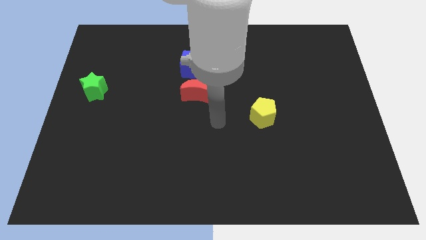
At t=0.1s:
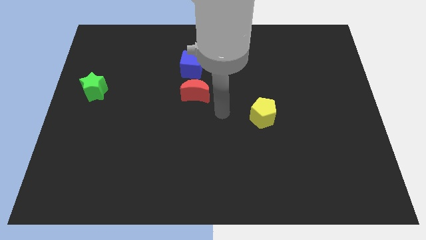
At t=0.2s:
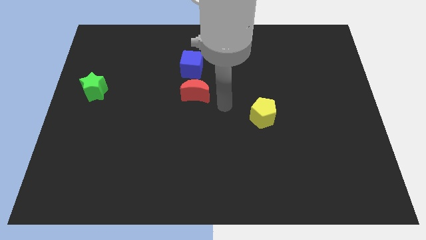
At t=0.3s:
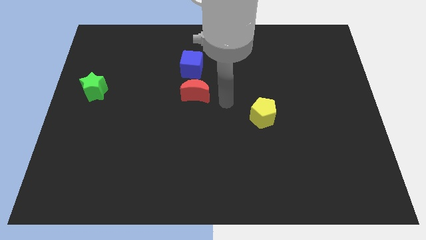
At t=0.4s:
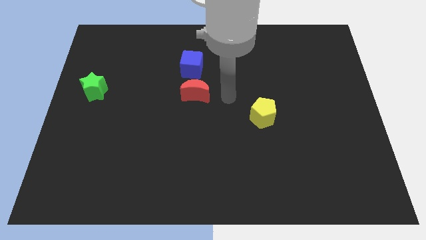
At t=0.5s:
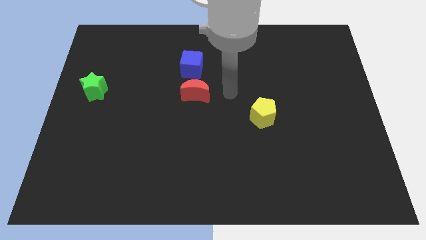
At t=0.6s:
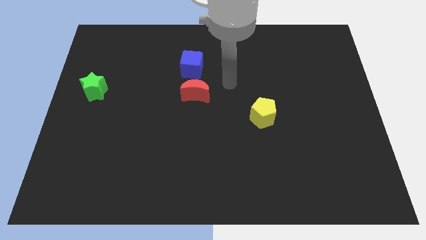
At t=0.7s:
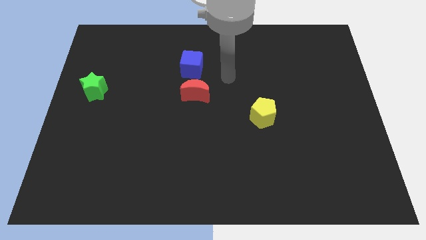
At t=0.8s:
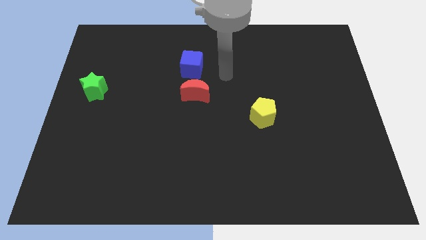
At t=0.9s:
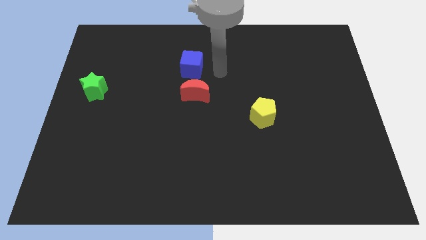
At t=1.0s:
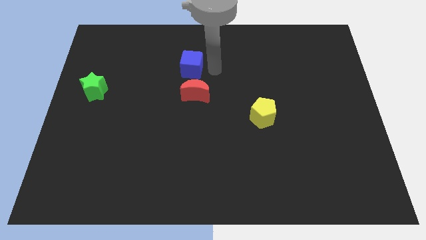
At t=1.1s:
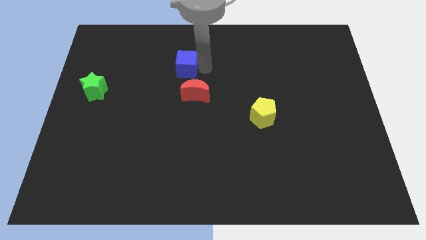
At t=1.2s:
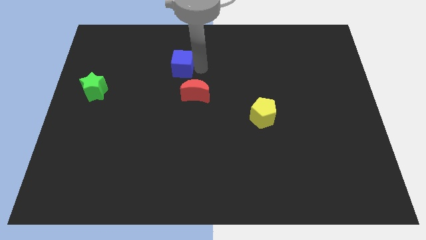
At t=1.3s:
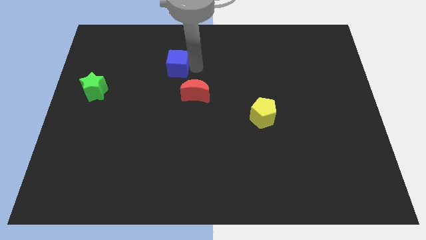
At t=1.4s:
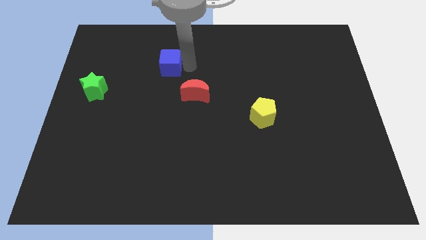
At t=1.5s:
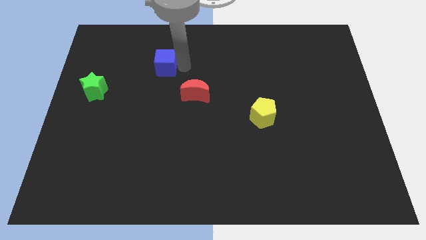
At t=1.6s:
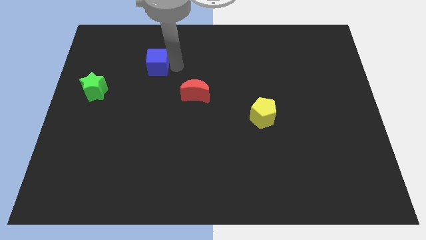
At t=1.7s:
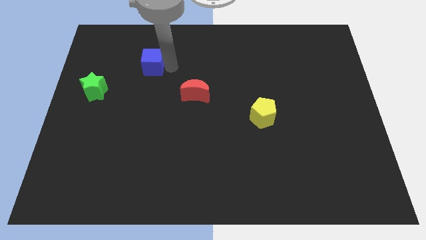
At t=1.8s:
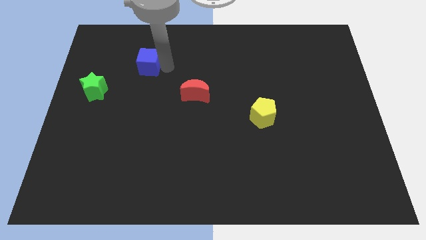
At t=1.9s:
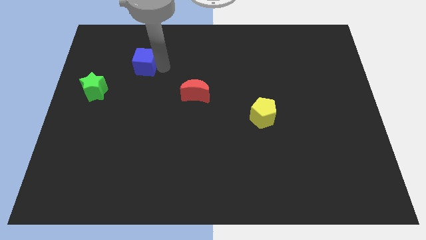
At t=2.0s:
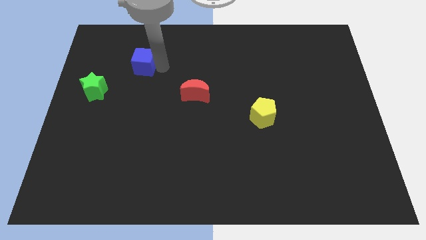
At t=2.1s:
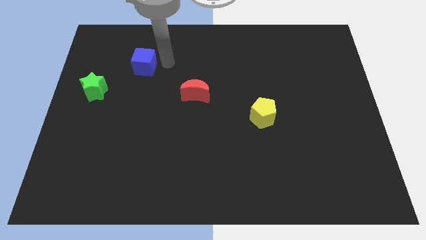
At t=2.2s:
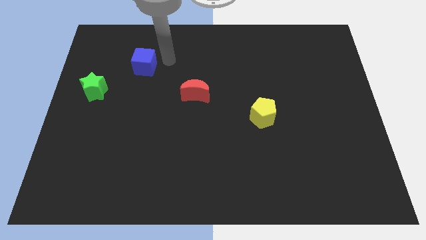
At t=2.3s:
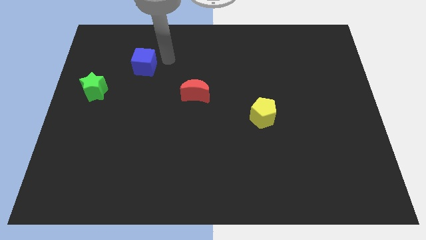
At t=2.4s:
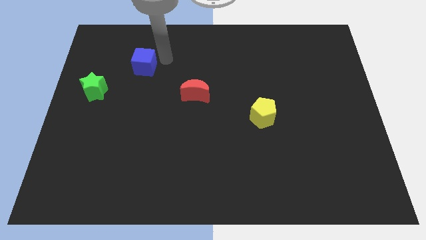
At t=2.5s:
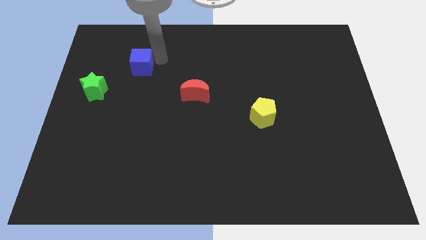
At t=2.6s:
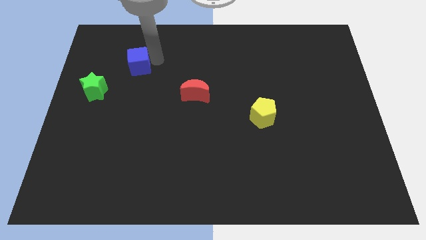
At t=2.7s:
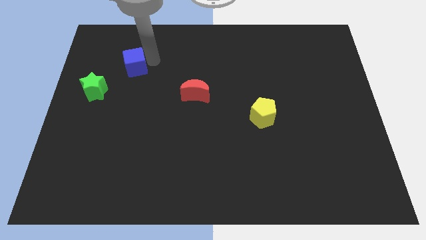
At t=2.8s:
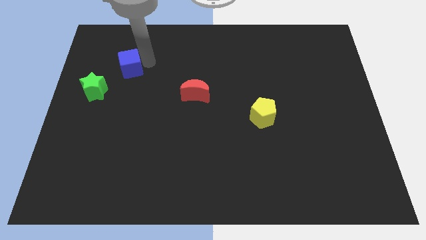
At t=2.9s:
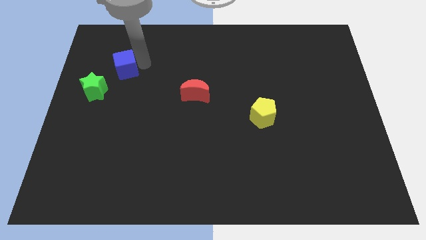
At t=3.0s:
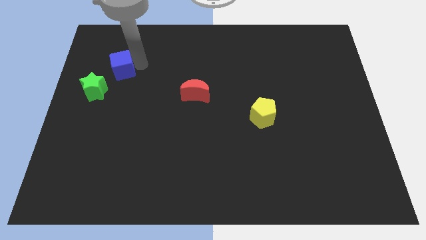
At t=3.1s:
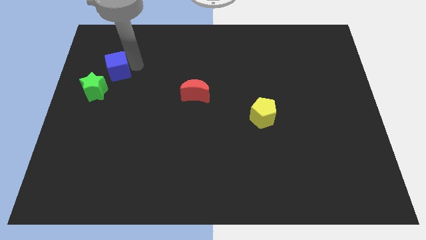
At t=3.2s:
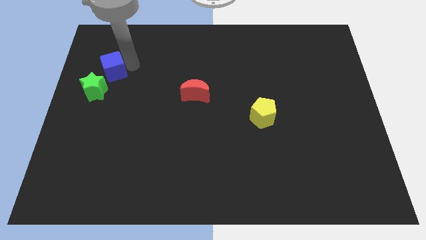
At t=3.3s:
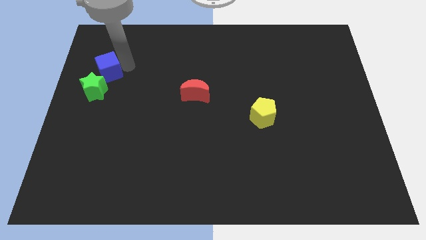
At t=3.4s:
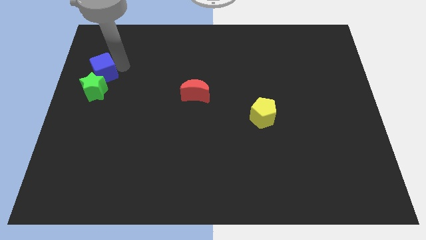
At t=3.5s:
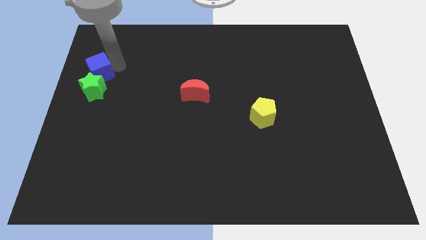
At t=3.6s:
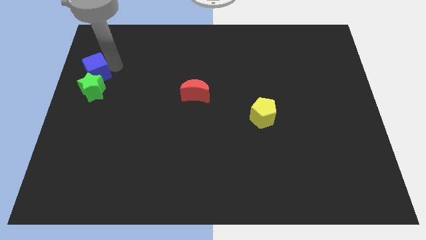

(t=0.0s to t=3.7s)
put the blue block next to the green block

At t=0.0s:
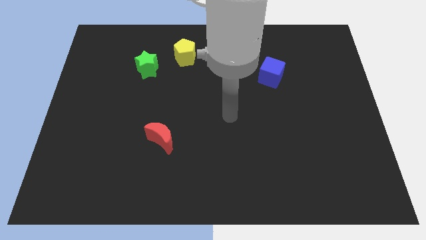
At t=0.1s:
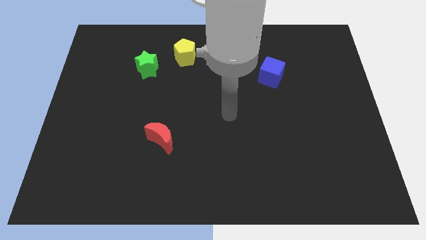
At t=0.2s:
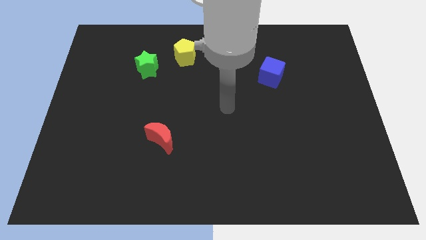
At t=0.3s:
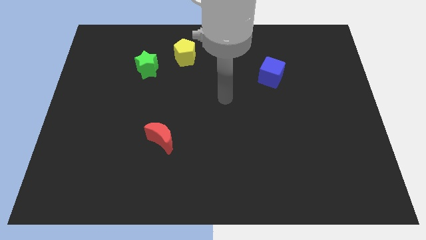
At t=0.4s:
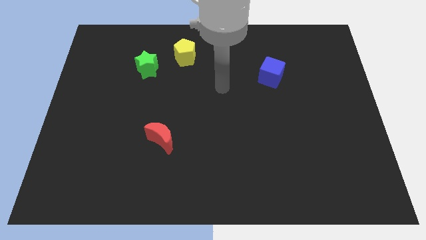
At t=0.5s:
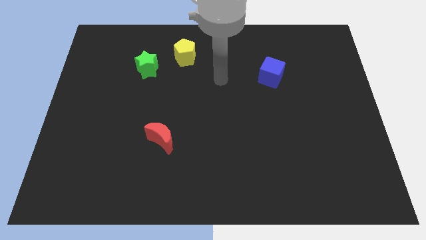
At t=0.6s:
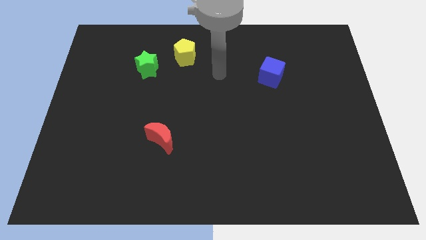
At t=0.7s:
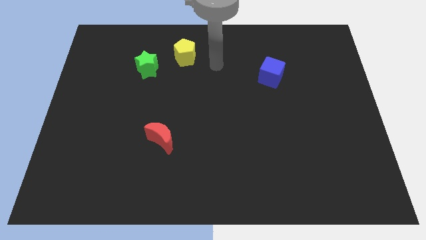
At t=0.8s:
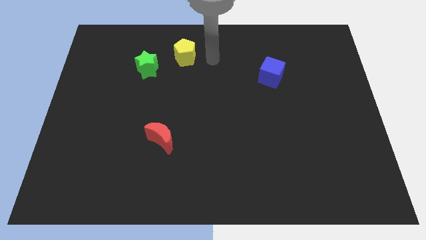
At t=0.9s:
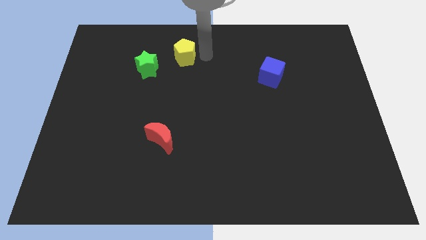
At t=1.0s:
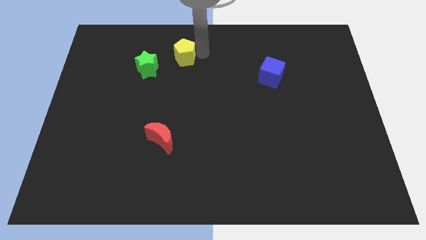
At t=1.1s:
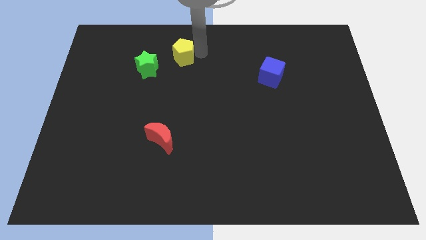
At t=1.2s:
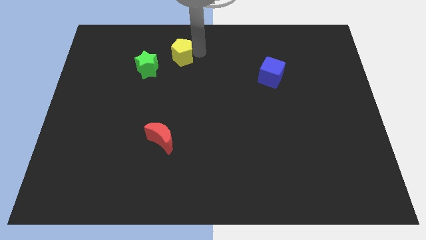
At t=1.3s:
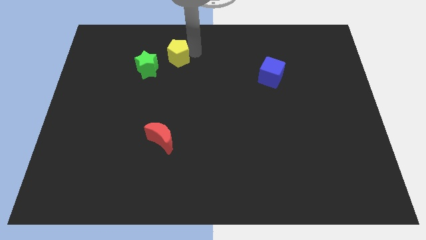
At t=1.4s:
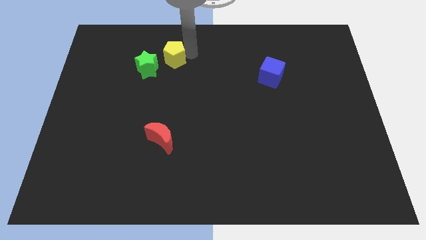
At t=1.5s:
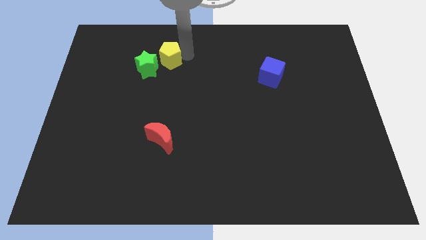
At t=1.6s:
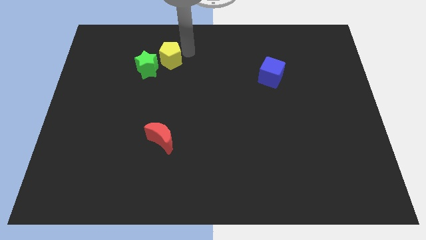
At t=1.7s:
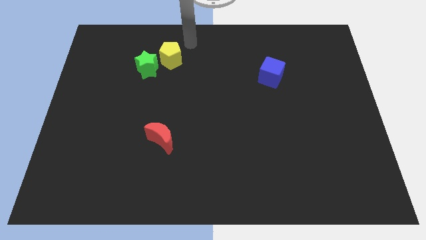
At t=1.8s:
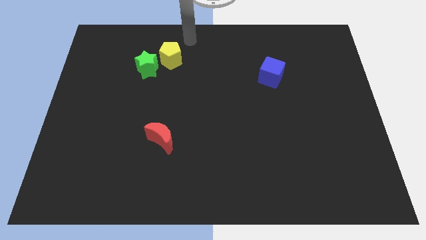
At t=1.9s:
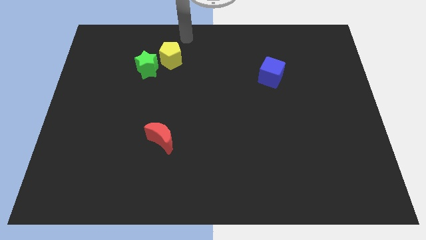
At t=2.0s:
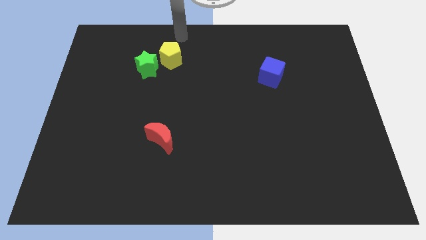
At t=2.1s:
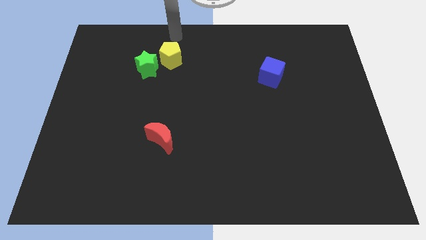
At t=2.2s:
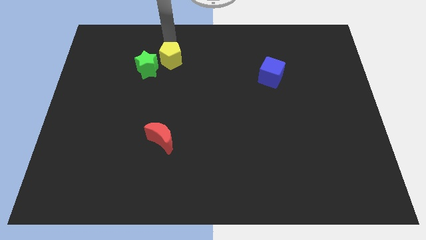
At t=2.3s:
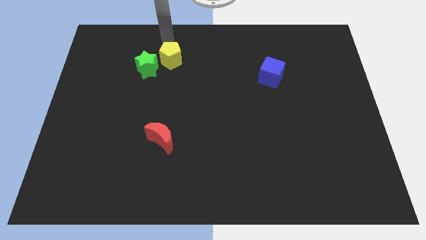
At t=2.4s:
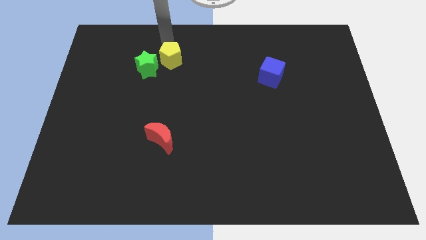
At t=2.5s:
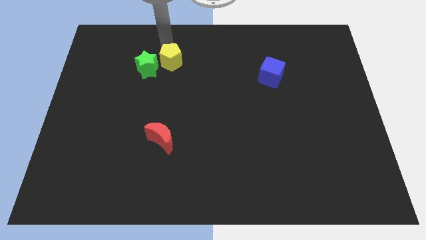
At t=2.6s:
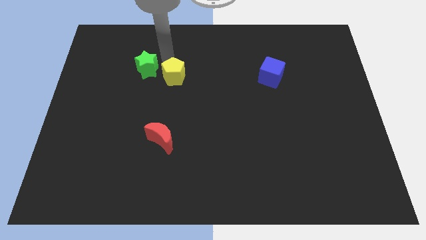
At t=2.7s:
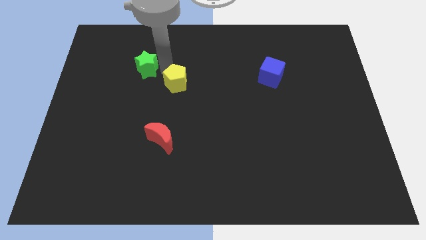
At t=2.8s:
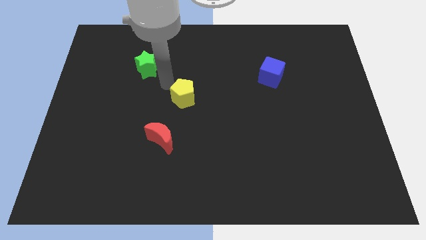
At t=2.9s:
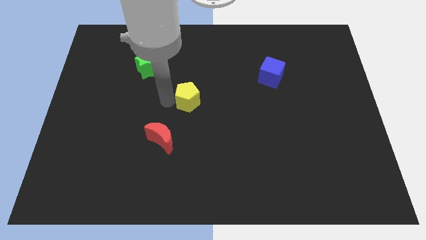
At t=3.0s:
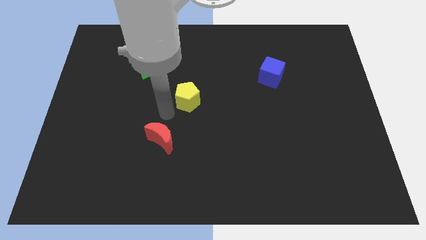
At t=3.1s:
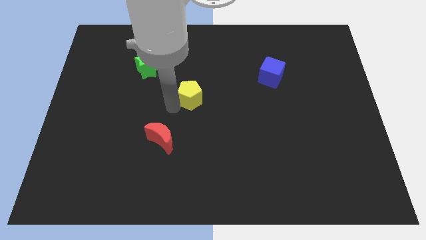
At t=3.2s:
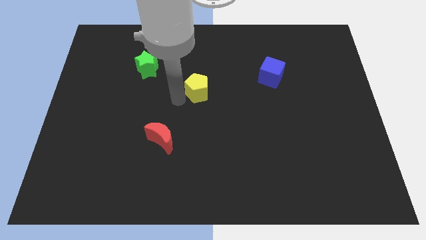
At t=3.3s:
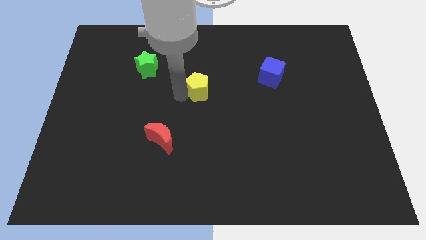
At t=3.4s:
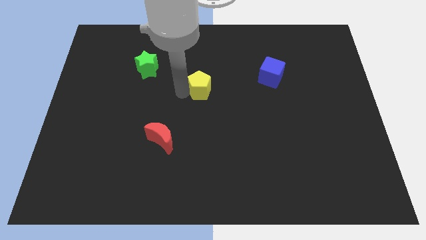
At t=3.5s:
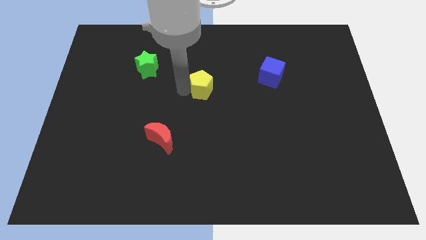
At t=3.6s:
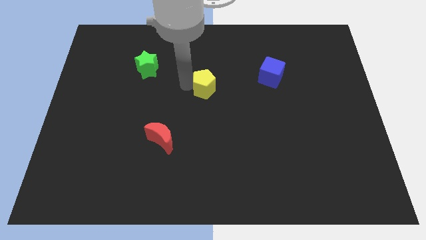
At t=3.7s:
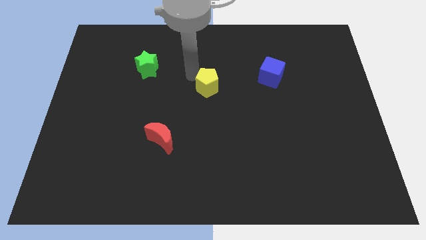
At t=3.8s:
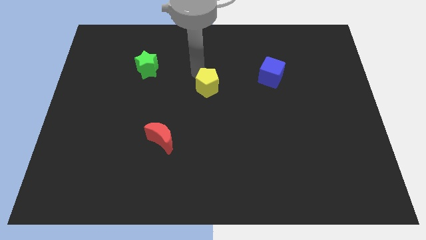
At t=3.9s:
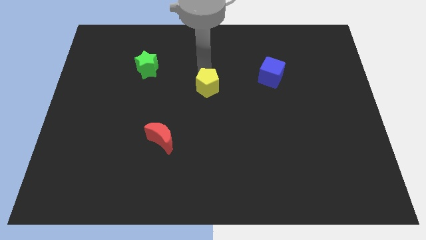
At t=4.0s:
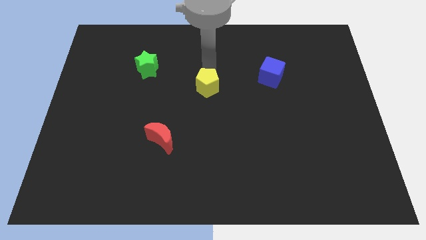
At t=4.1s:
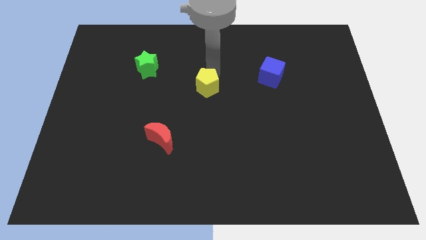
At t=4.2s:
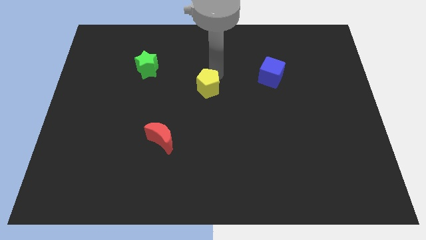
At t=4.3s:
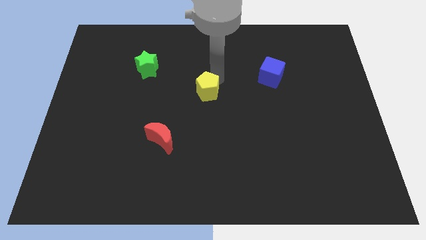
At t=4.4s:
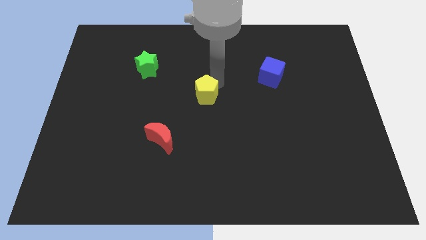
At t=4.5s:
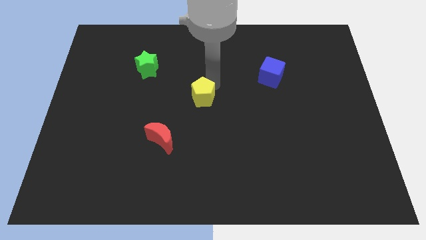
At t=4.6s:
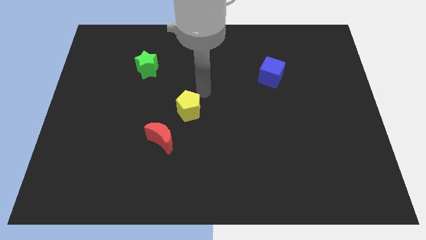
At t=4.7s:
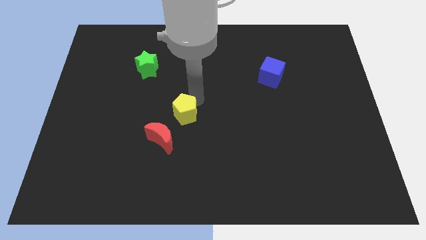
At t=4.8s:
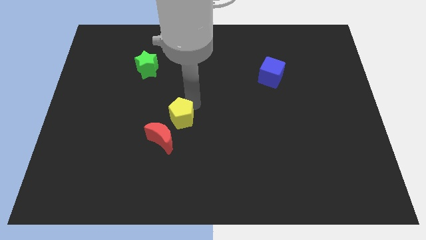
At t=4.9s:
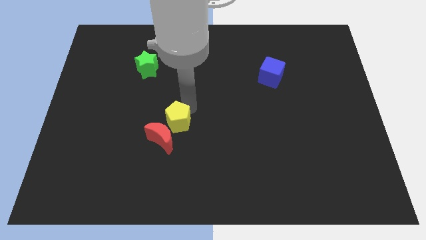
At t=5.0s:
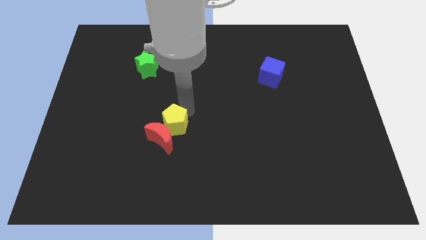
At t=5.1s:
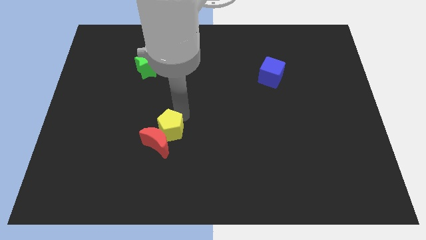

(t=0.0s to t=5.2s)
slide the pentagon towards the red moon
